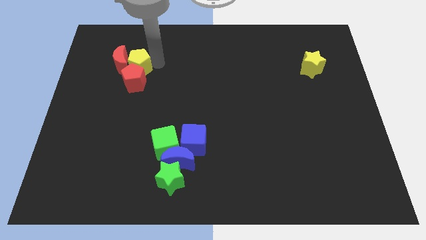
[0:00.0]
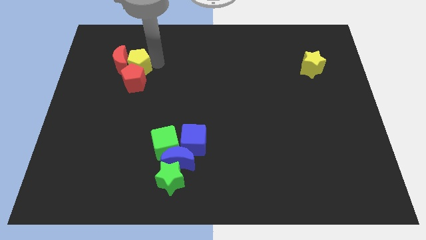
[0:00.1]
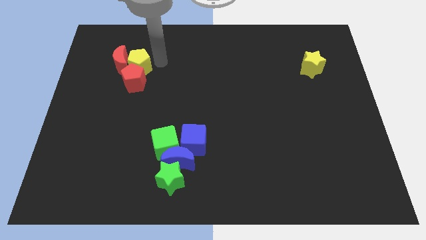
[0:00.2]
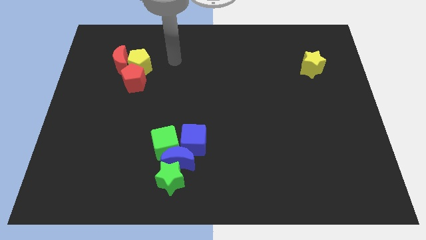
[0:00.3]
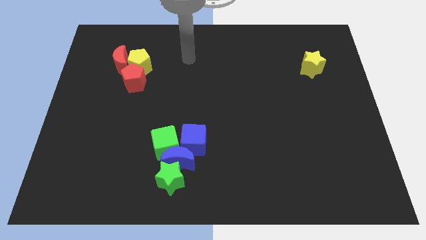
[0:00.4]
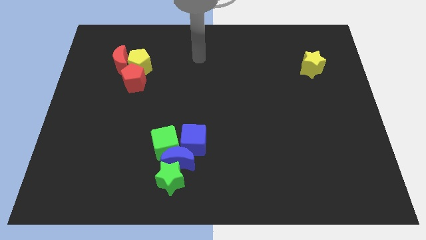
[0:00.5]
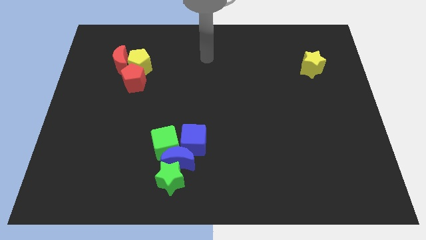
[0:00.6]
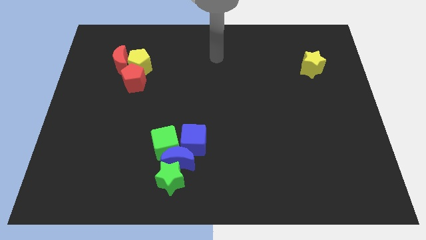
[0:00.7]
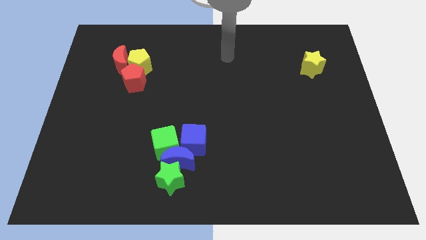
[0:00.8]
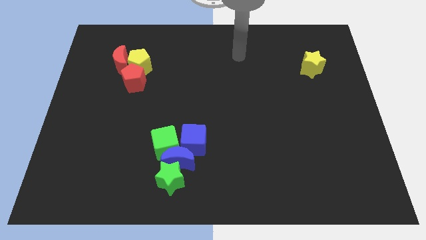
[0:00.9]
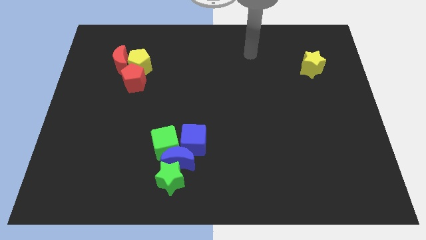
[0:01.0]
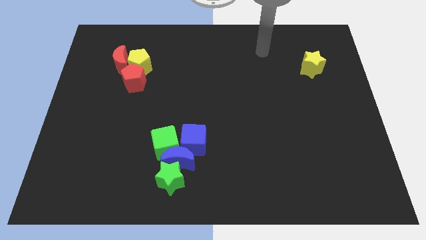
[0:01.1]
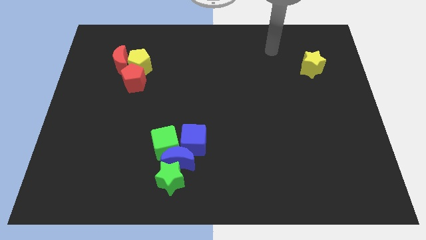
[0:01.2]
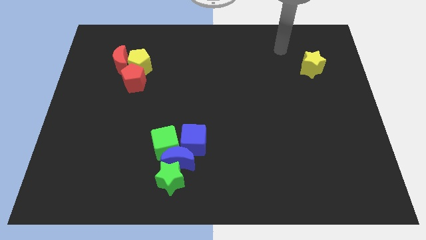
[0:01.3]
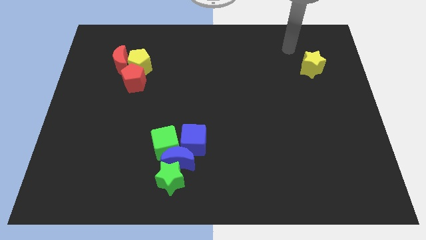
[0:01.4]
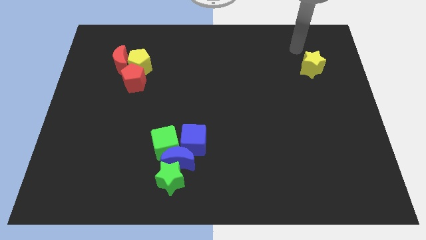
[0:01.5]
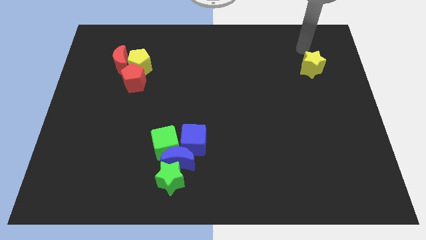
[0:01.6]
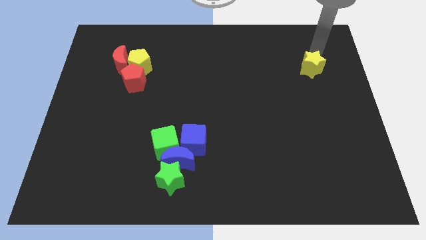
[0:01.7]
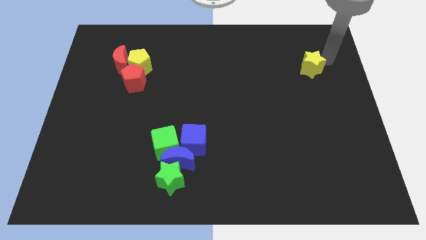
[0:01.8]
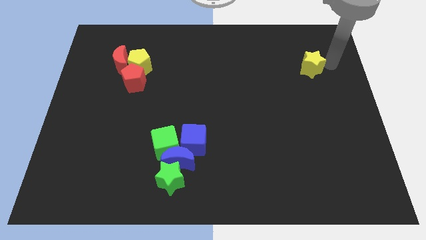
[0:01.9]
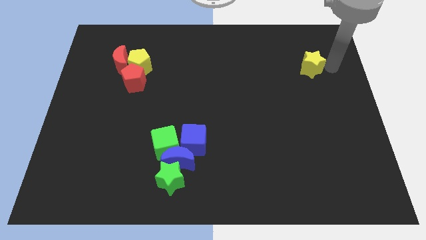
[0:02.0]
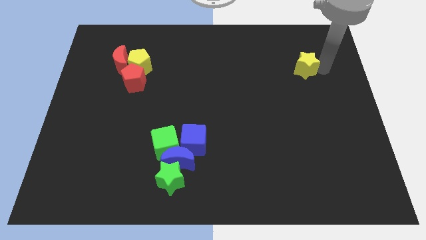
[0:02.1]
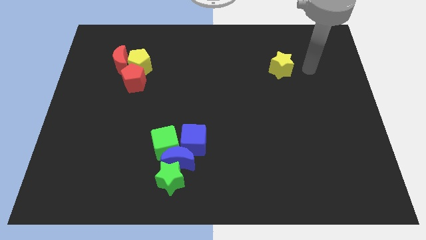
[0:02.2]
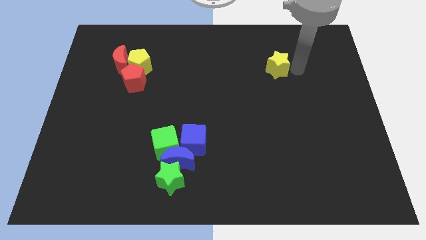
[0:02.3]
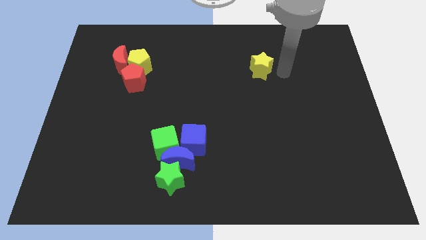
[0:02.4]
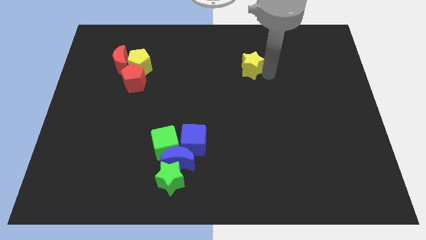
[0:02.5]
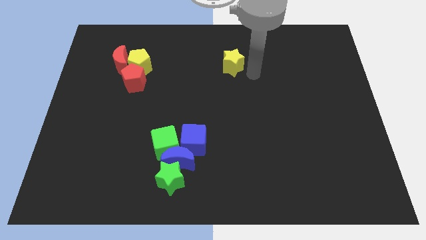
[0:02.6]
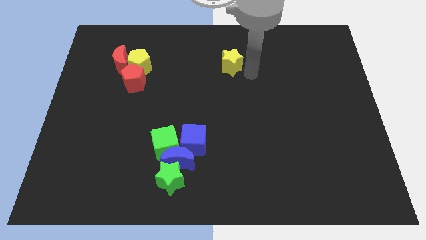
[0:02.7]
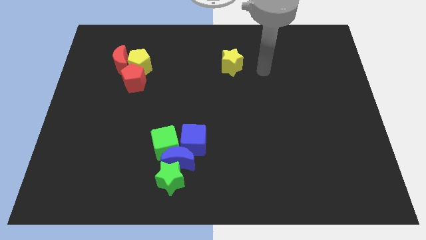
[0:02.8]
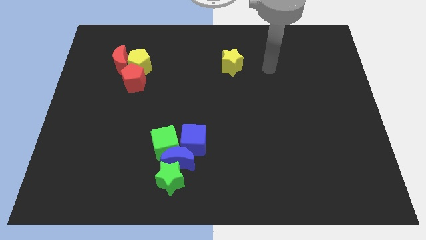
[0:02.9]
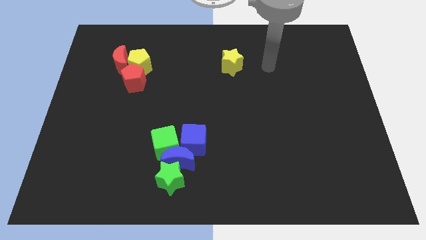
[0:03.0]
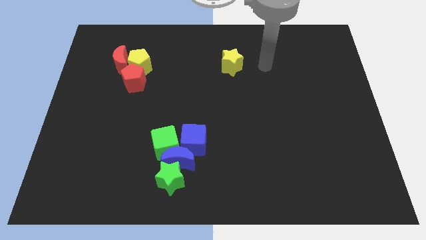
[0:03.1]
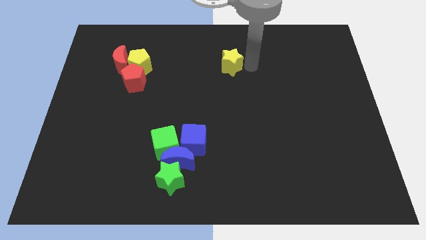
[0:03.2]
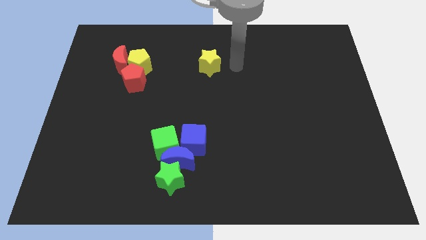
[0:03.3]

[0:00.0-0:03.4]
place the yellow star to the top center of the board

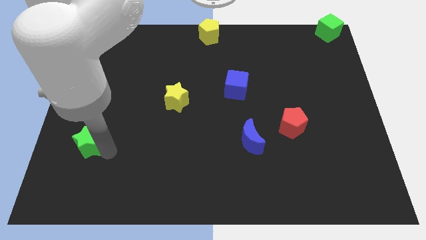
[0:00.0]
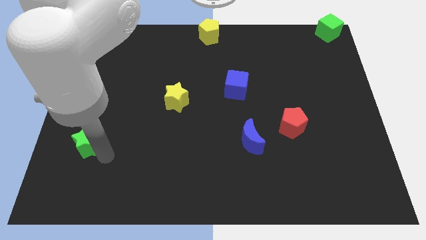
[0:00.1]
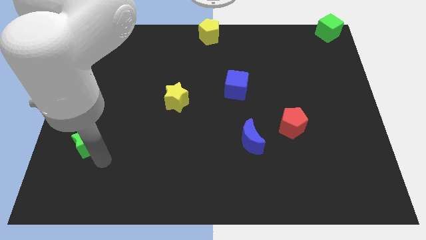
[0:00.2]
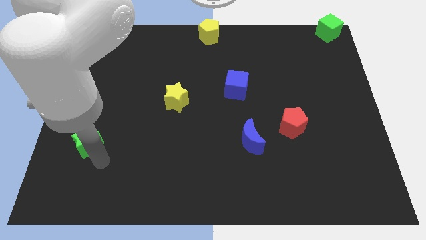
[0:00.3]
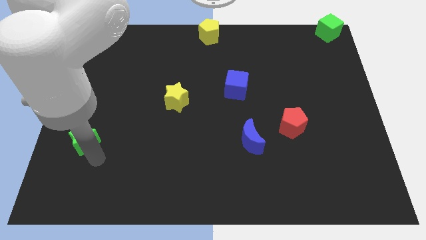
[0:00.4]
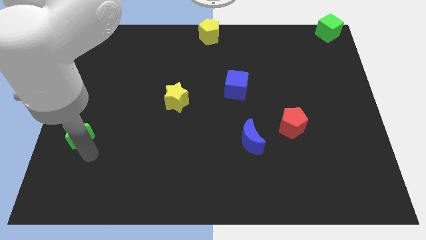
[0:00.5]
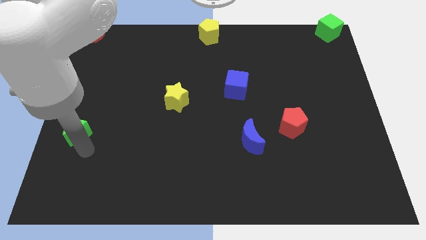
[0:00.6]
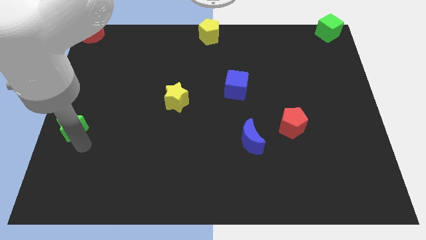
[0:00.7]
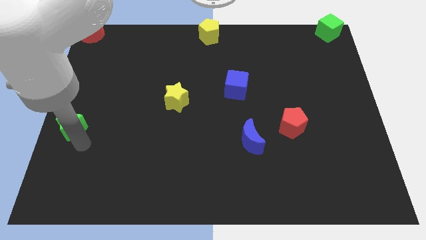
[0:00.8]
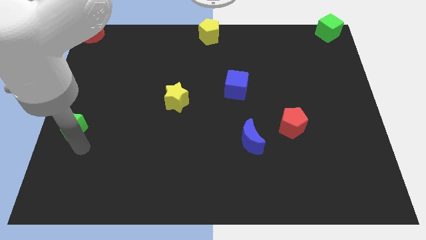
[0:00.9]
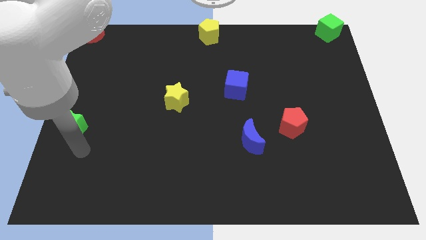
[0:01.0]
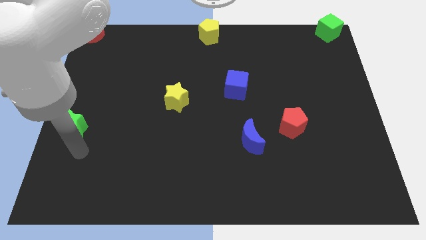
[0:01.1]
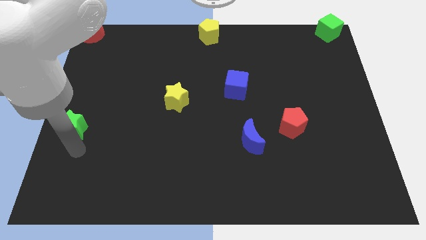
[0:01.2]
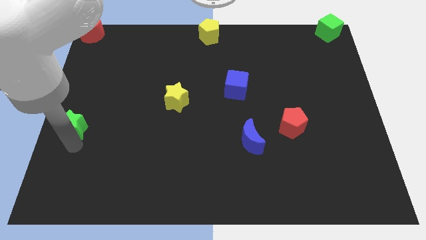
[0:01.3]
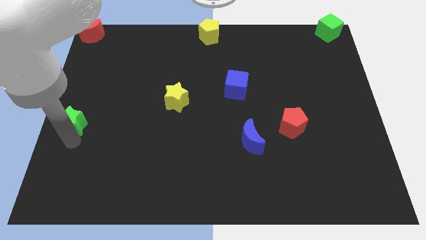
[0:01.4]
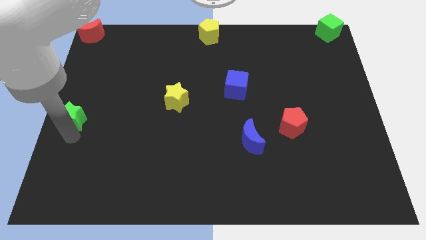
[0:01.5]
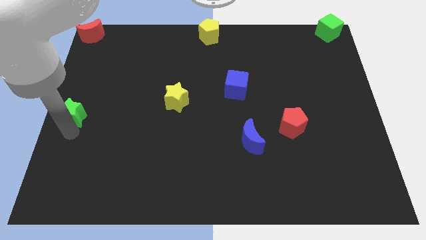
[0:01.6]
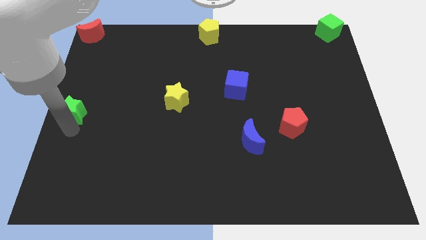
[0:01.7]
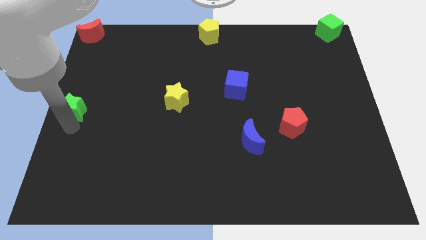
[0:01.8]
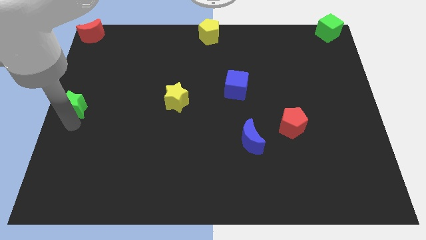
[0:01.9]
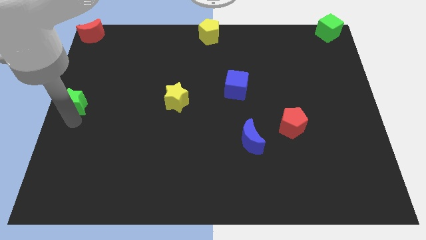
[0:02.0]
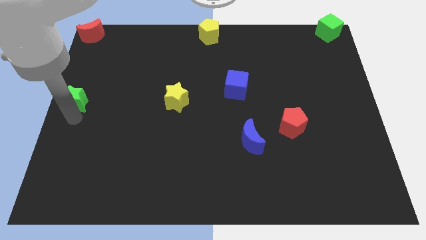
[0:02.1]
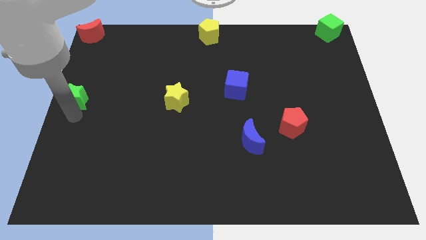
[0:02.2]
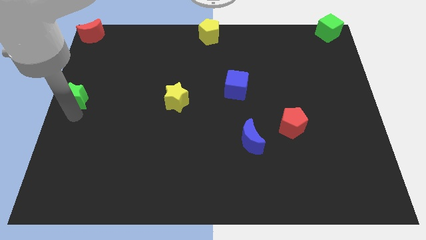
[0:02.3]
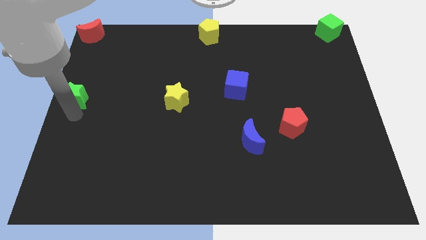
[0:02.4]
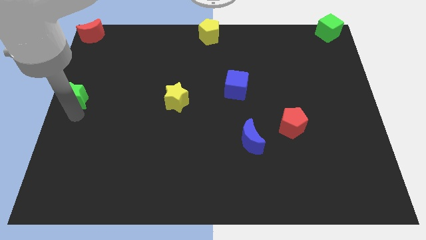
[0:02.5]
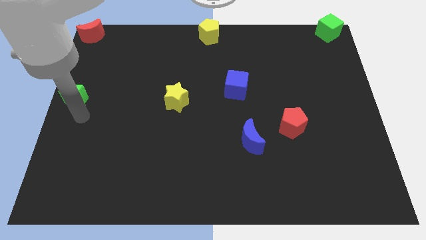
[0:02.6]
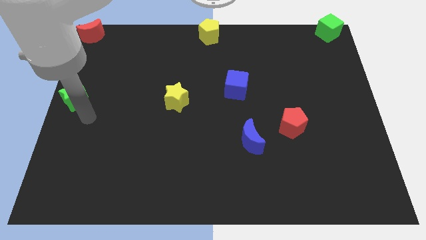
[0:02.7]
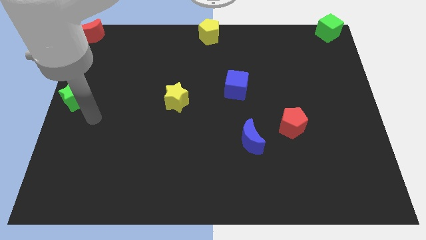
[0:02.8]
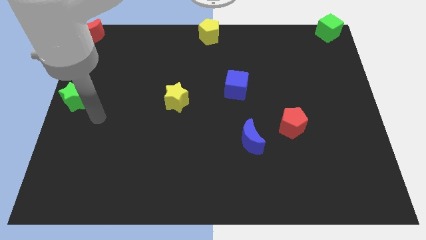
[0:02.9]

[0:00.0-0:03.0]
push the green star to the left center of the board

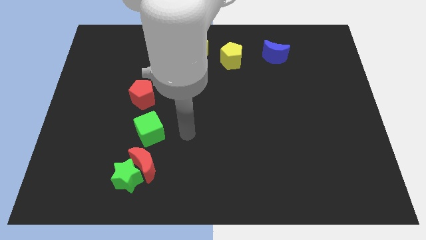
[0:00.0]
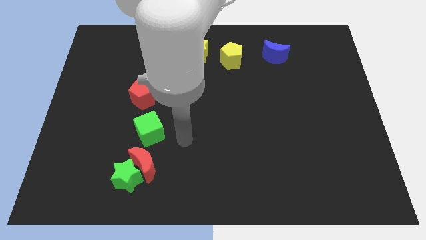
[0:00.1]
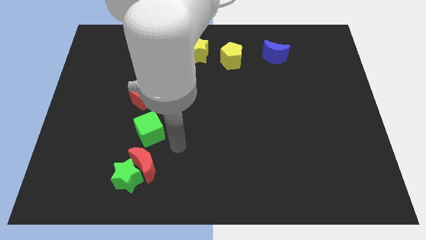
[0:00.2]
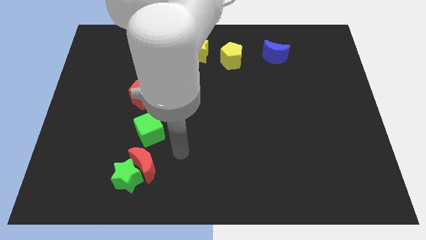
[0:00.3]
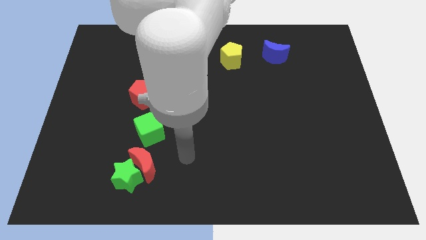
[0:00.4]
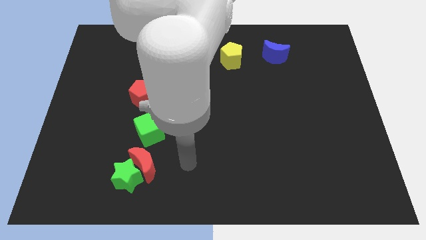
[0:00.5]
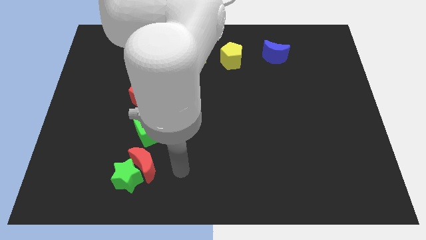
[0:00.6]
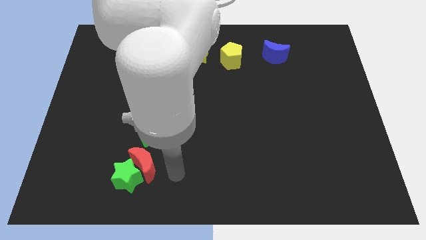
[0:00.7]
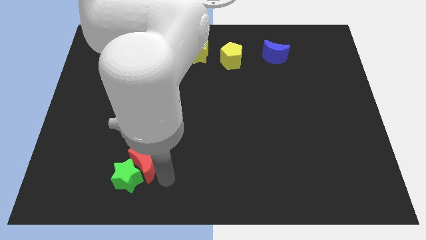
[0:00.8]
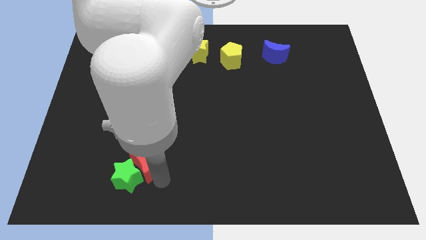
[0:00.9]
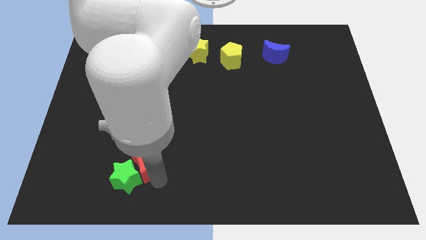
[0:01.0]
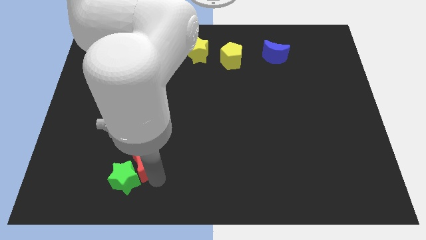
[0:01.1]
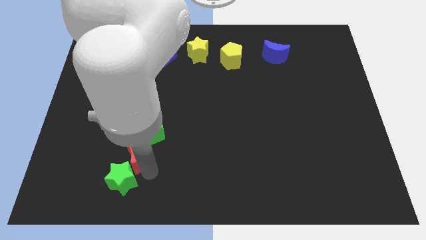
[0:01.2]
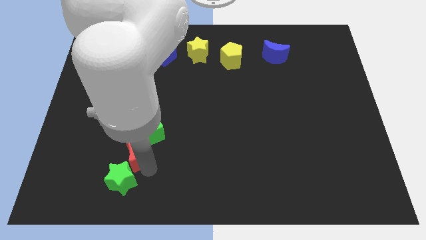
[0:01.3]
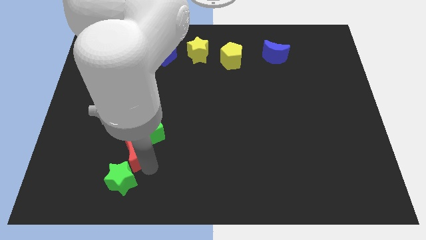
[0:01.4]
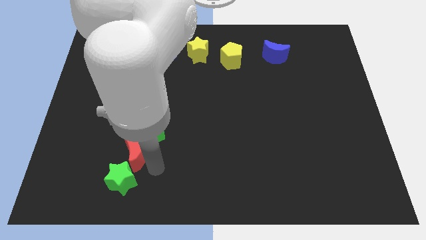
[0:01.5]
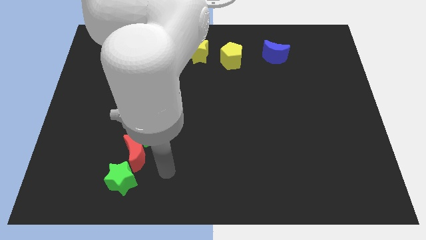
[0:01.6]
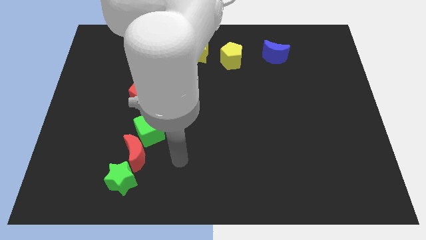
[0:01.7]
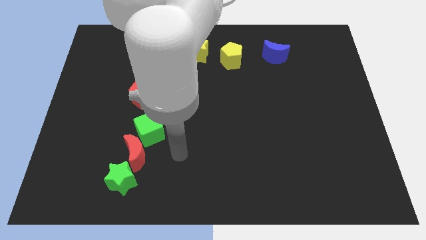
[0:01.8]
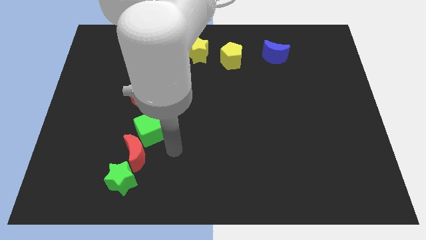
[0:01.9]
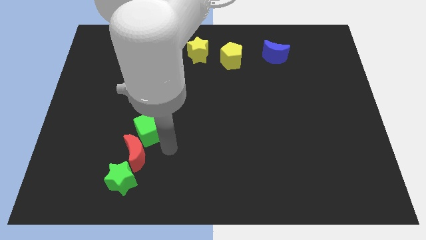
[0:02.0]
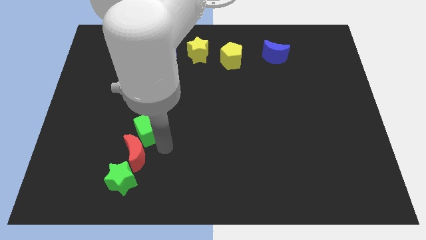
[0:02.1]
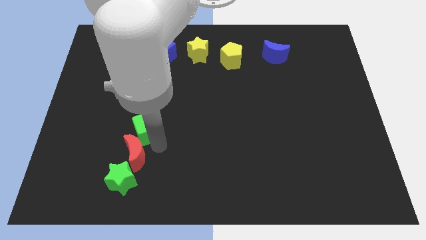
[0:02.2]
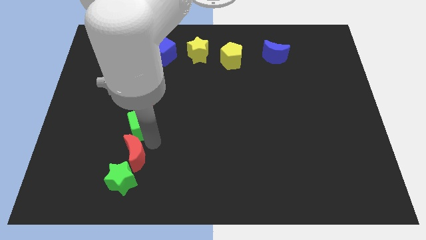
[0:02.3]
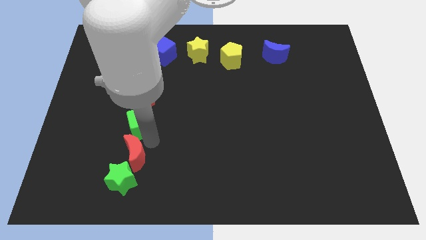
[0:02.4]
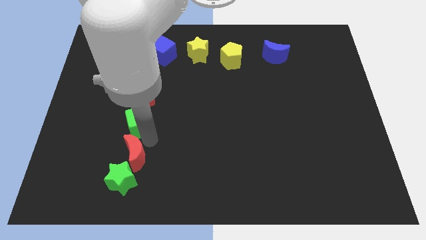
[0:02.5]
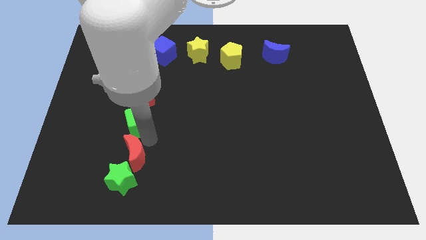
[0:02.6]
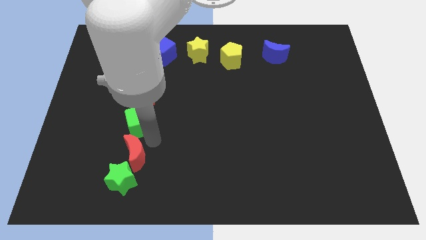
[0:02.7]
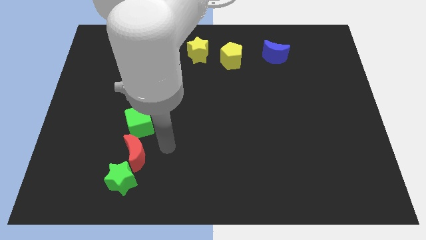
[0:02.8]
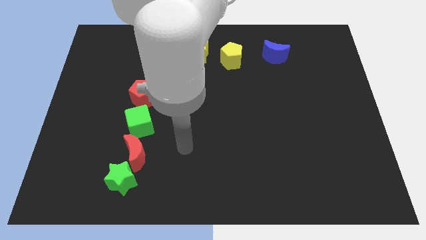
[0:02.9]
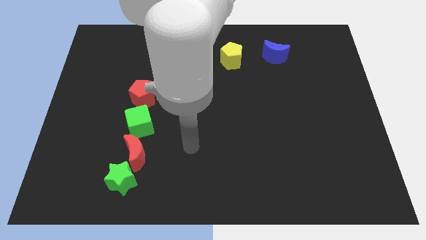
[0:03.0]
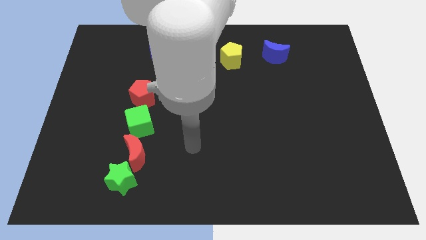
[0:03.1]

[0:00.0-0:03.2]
place the green cube below the red pentagon
